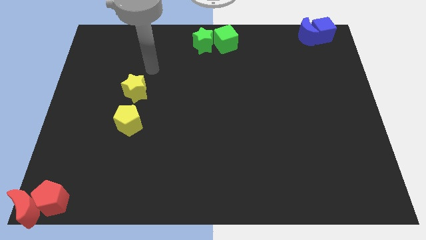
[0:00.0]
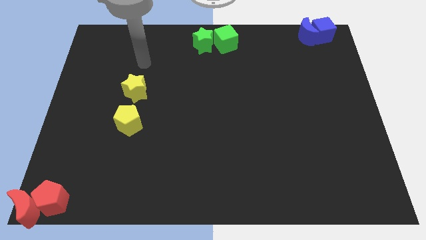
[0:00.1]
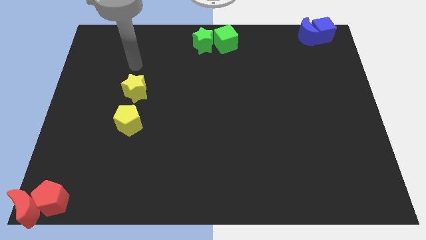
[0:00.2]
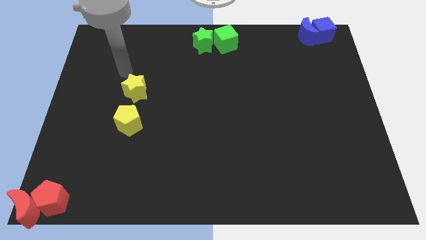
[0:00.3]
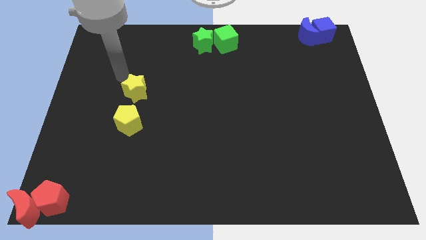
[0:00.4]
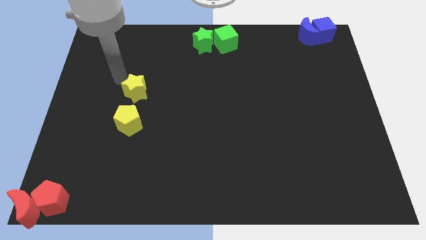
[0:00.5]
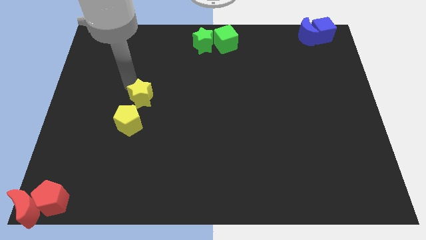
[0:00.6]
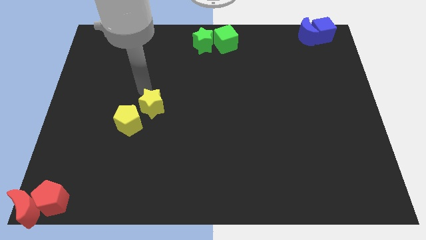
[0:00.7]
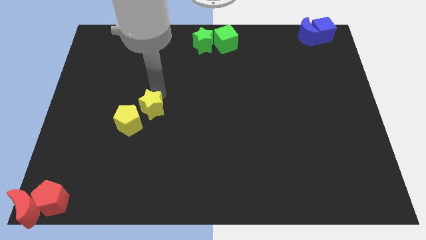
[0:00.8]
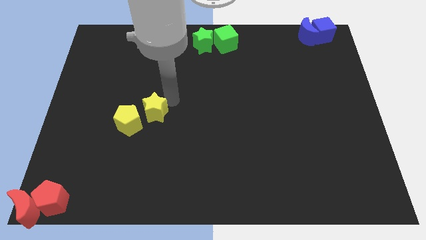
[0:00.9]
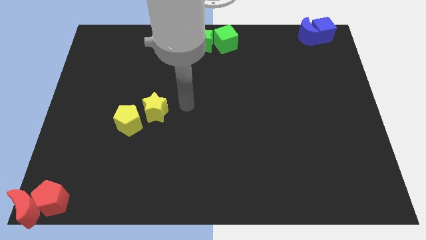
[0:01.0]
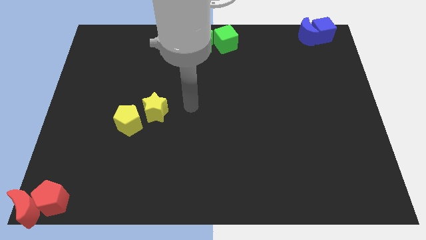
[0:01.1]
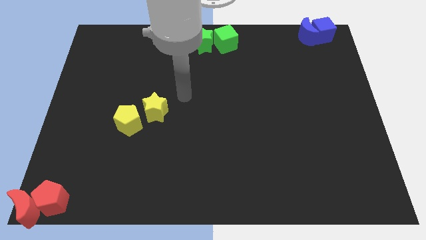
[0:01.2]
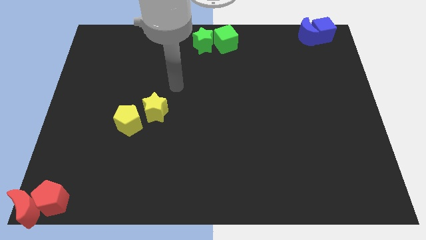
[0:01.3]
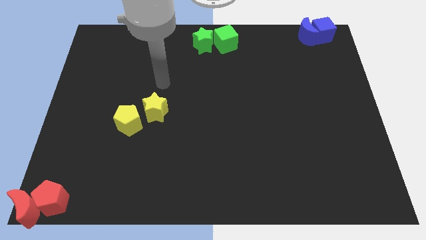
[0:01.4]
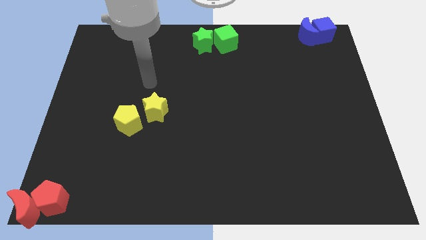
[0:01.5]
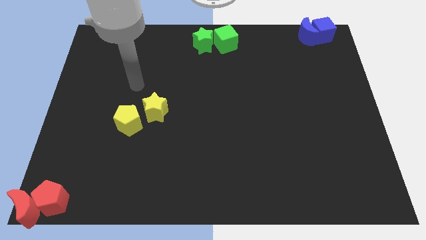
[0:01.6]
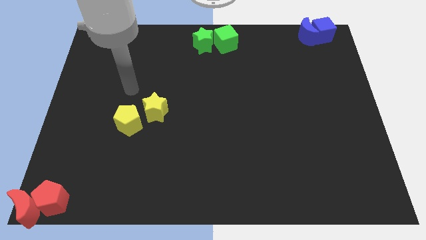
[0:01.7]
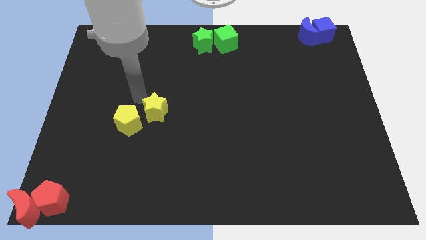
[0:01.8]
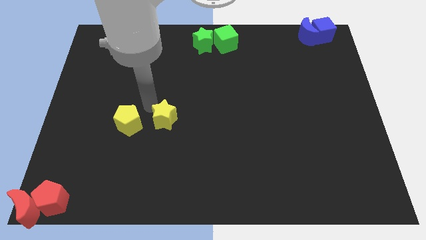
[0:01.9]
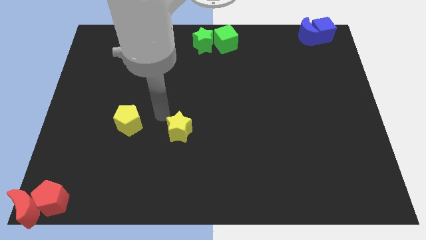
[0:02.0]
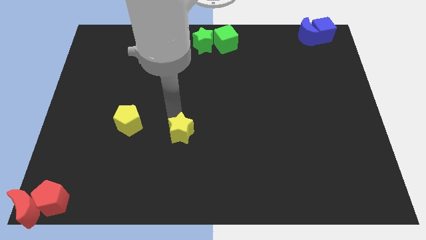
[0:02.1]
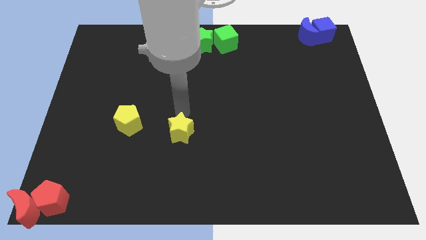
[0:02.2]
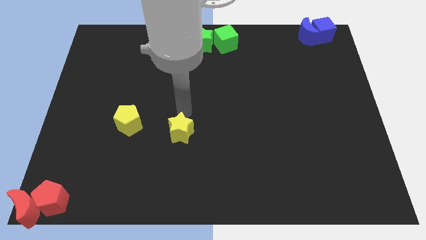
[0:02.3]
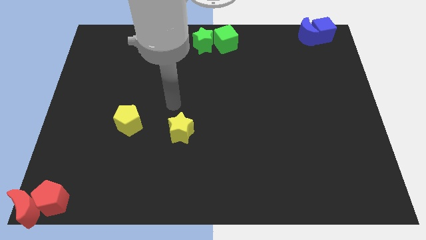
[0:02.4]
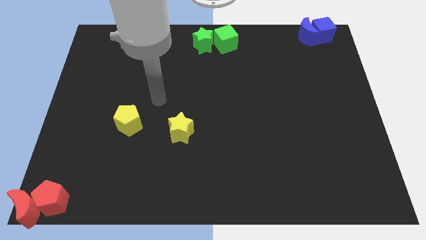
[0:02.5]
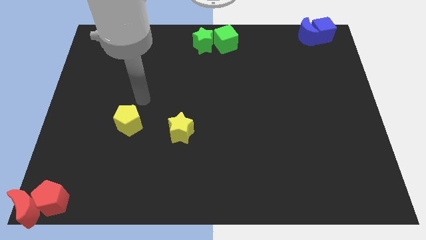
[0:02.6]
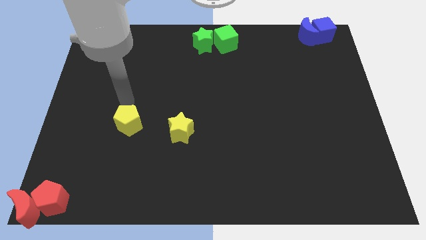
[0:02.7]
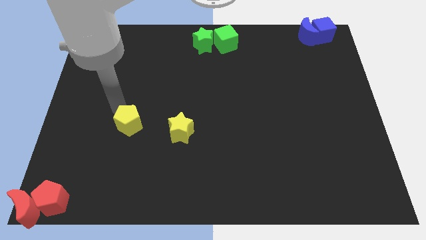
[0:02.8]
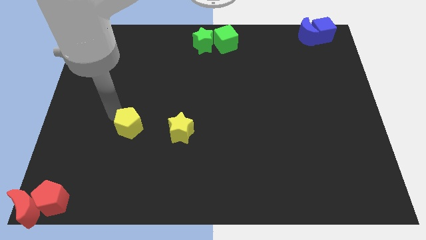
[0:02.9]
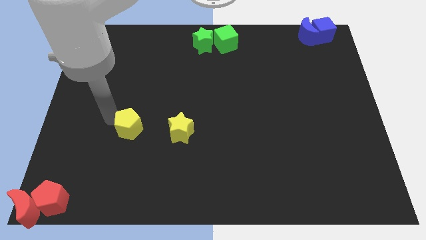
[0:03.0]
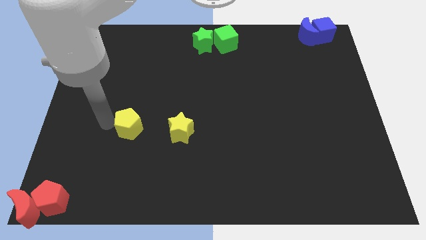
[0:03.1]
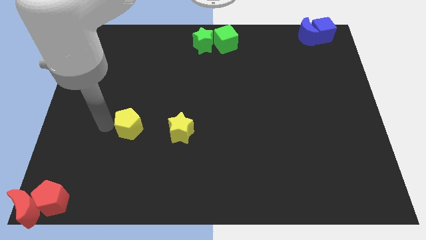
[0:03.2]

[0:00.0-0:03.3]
push the yellow star to the right of the yellow pentagon

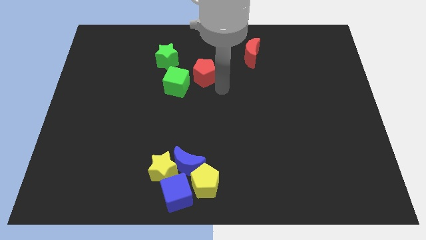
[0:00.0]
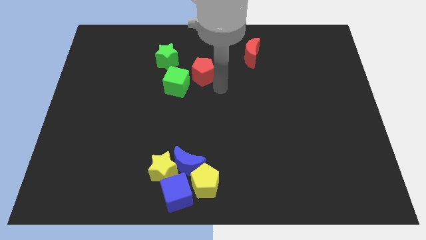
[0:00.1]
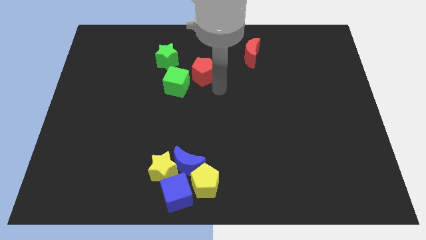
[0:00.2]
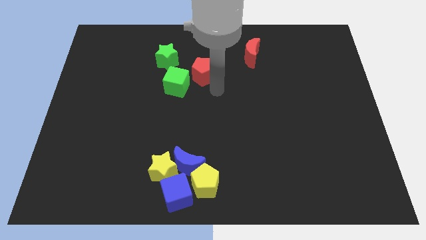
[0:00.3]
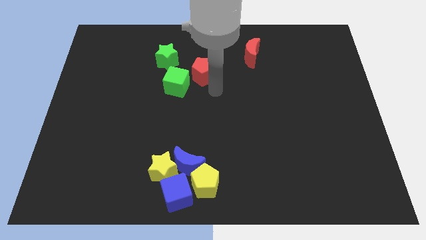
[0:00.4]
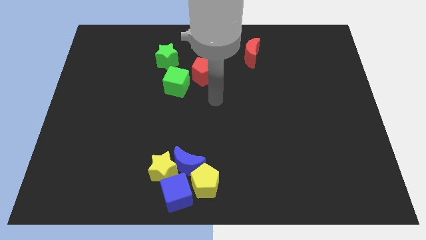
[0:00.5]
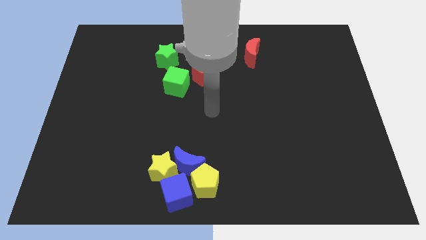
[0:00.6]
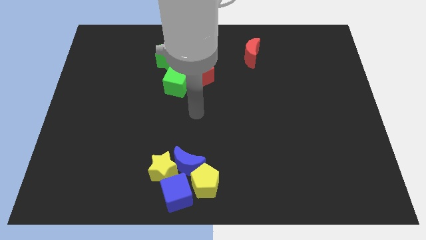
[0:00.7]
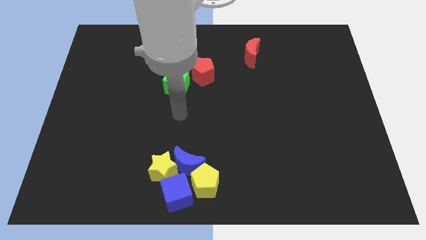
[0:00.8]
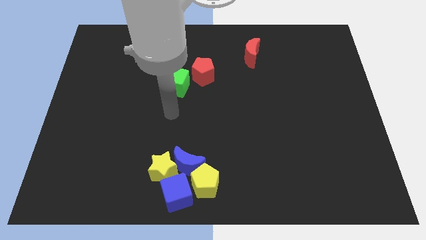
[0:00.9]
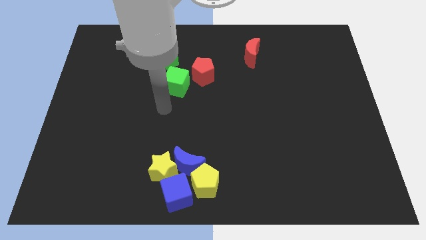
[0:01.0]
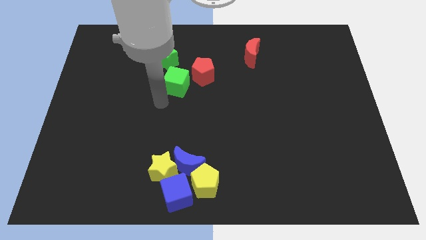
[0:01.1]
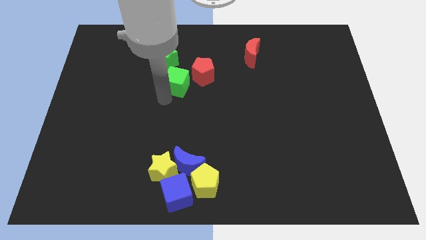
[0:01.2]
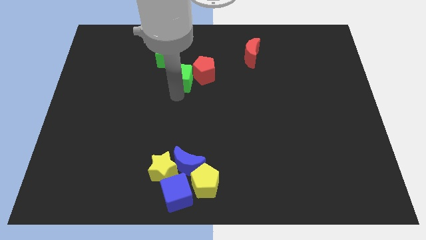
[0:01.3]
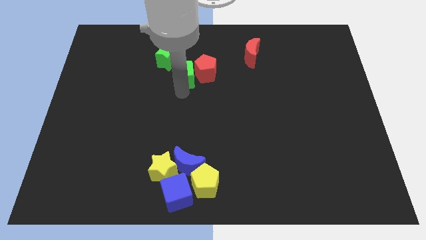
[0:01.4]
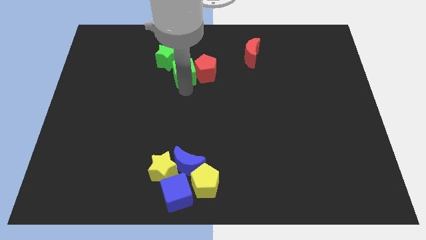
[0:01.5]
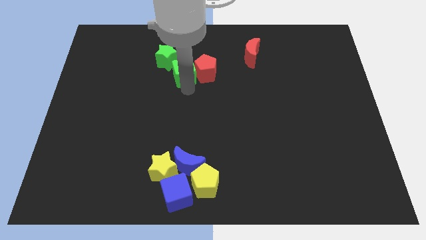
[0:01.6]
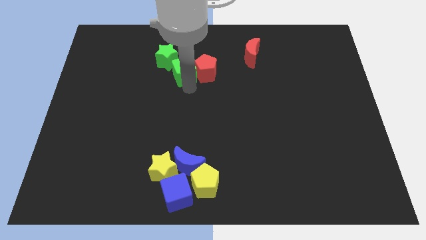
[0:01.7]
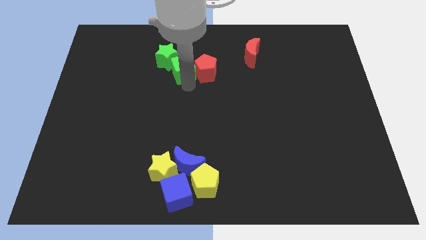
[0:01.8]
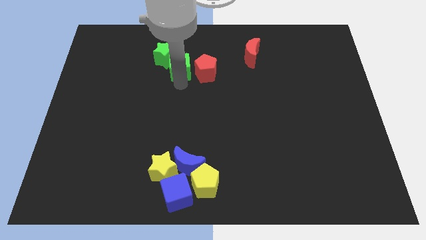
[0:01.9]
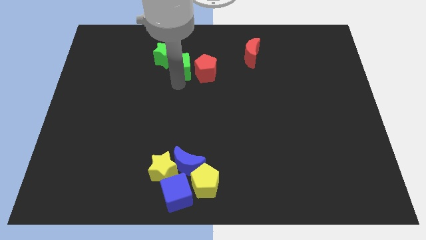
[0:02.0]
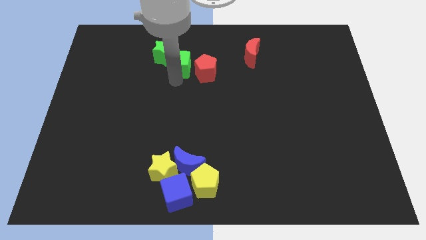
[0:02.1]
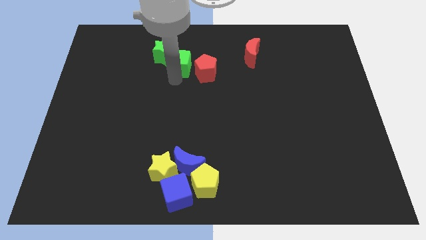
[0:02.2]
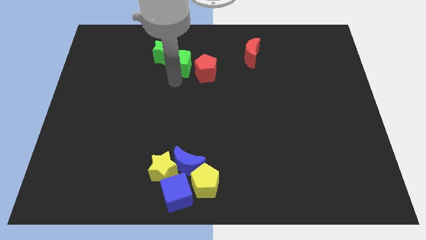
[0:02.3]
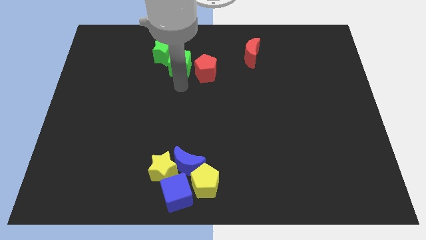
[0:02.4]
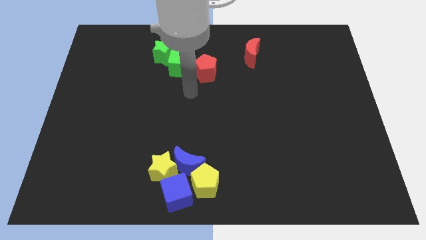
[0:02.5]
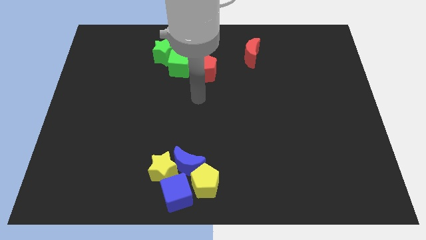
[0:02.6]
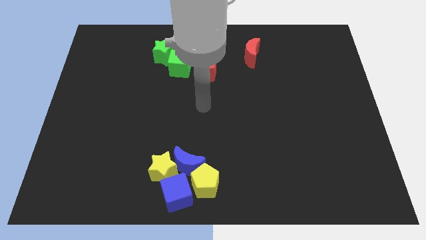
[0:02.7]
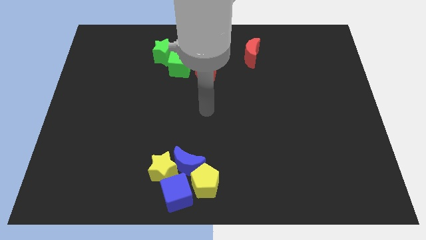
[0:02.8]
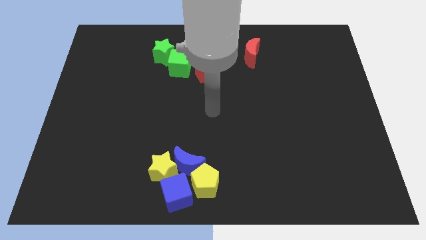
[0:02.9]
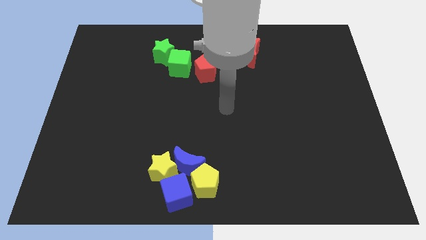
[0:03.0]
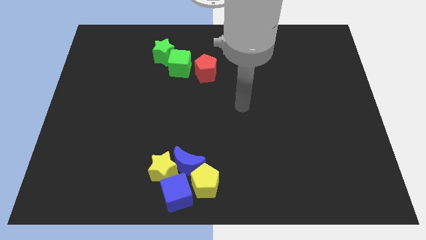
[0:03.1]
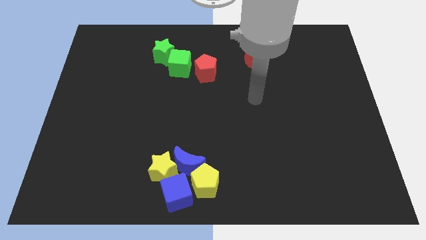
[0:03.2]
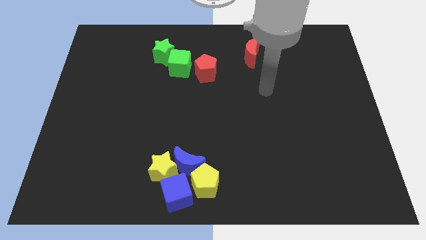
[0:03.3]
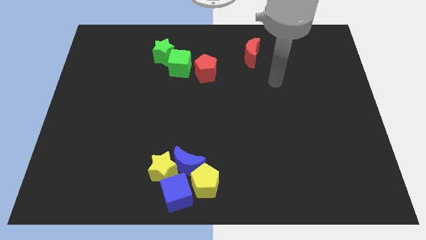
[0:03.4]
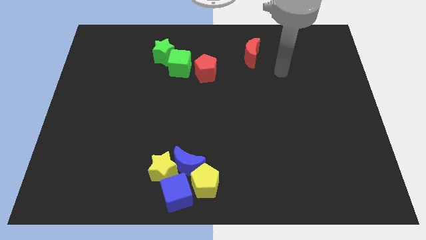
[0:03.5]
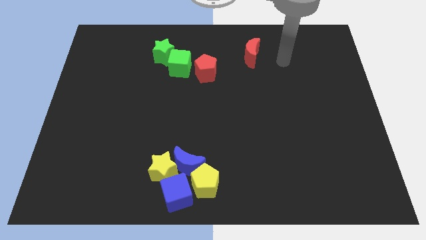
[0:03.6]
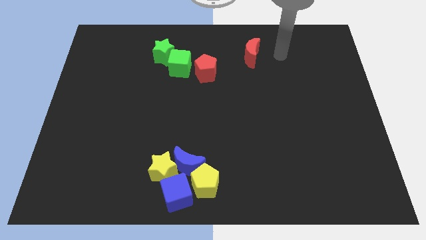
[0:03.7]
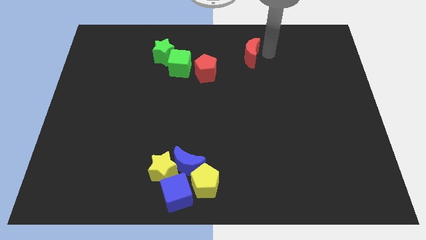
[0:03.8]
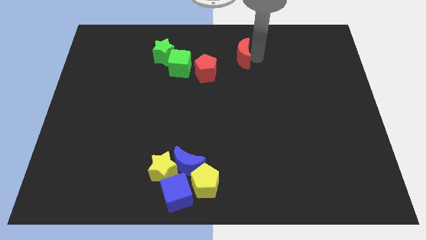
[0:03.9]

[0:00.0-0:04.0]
push the green cube into the green star

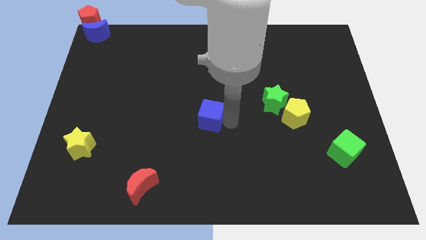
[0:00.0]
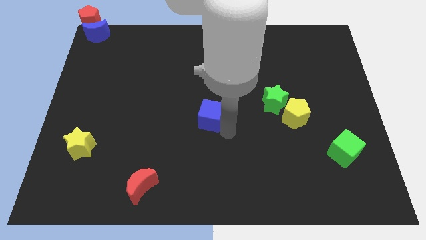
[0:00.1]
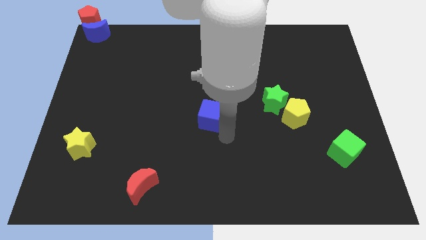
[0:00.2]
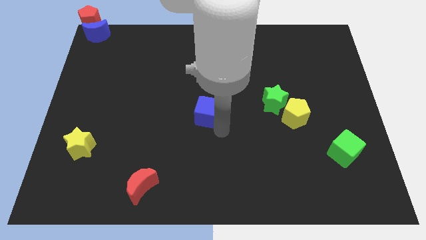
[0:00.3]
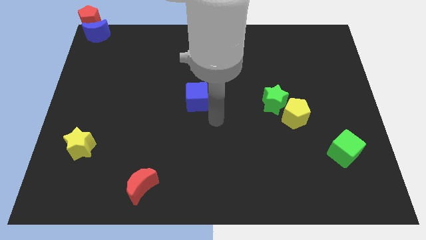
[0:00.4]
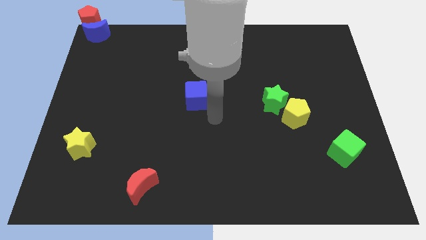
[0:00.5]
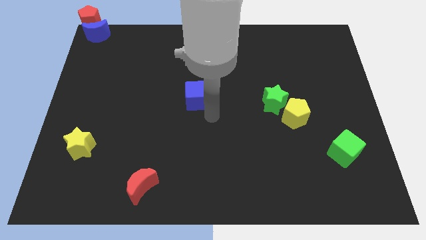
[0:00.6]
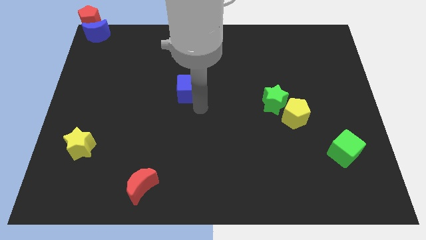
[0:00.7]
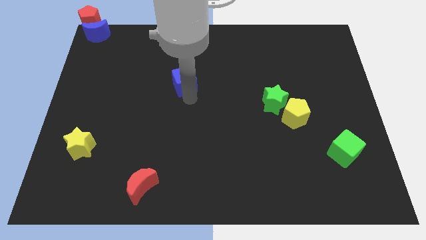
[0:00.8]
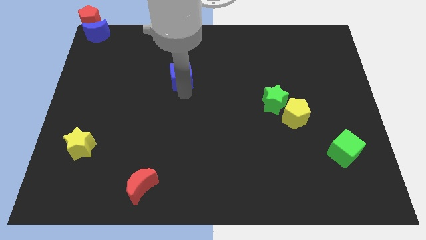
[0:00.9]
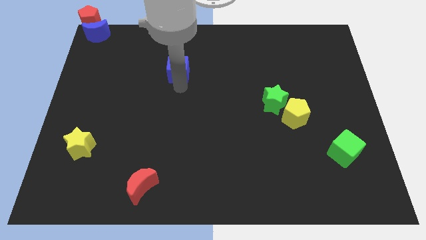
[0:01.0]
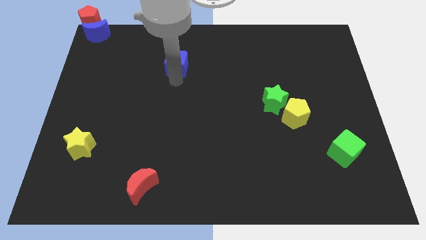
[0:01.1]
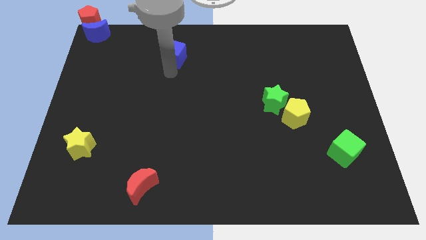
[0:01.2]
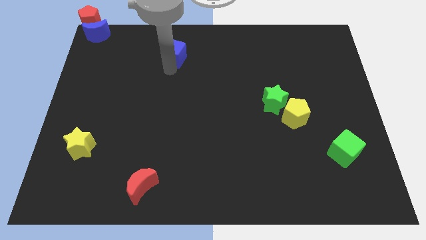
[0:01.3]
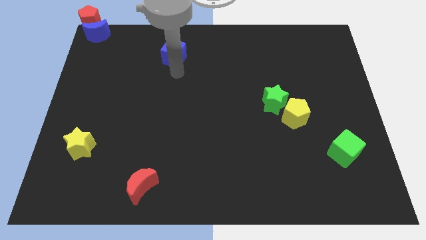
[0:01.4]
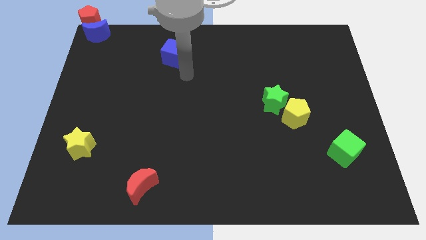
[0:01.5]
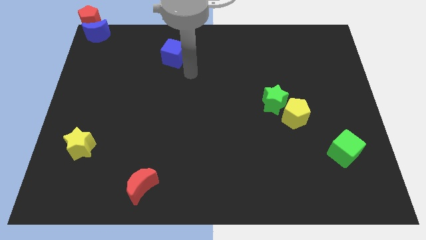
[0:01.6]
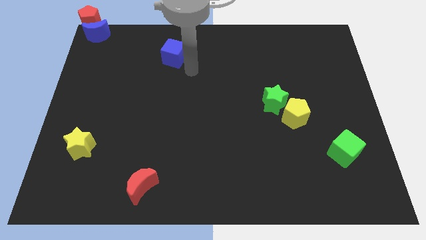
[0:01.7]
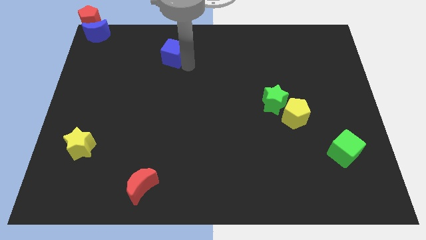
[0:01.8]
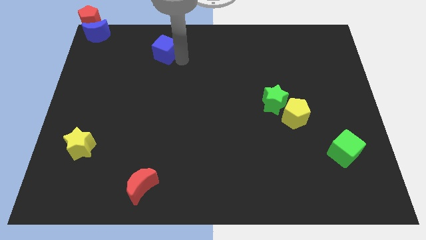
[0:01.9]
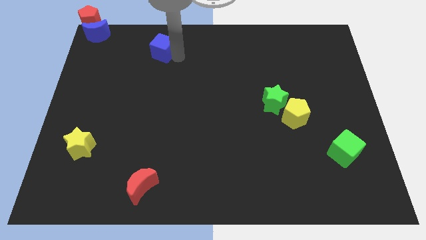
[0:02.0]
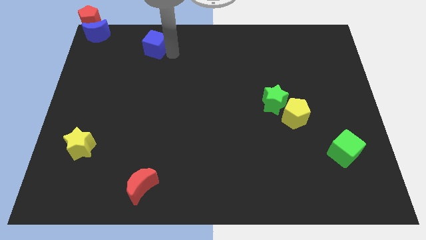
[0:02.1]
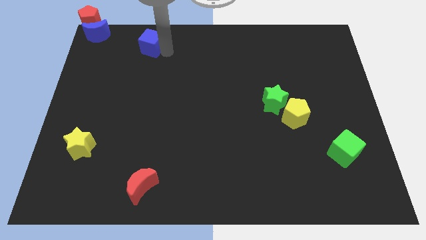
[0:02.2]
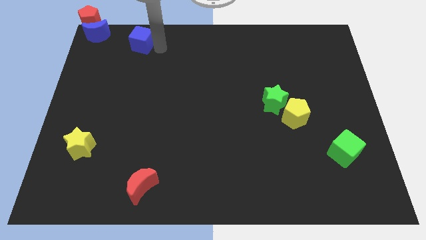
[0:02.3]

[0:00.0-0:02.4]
place blue cube towards top left
